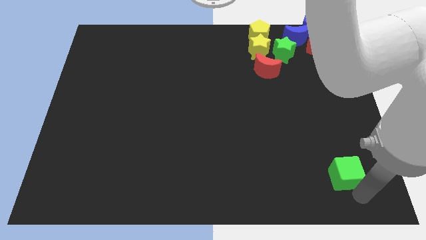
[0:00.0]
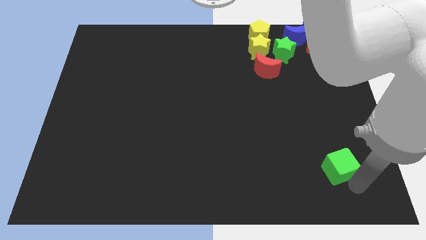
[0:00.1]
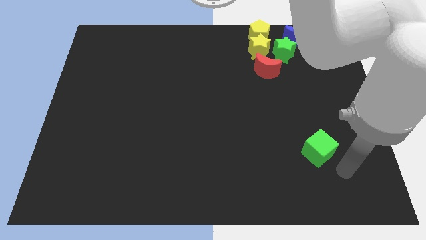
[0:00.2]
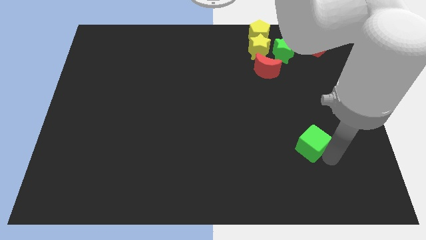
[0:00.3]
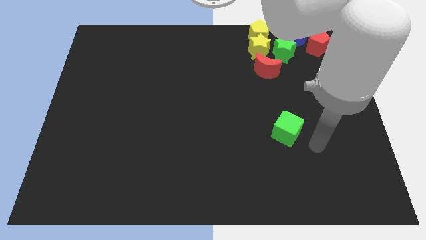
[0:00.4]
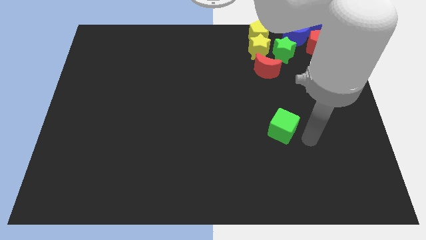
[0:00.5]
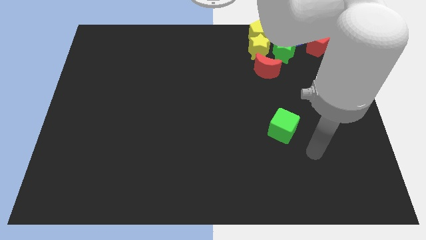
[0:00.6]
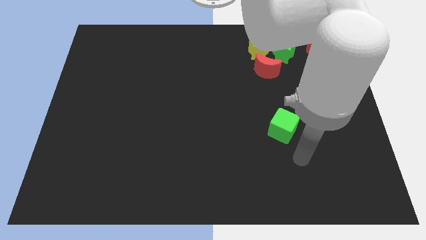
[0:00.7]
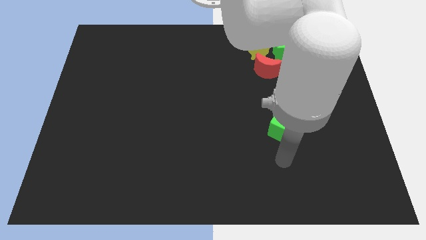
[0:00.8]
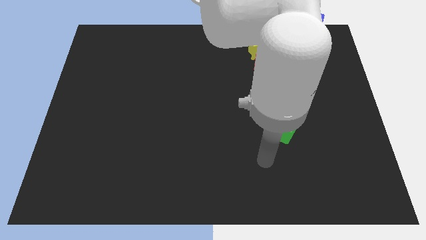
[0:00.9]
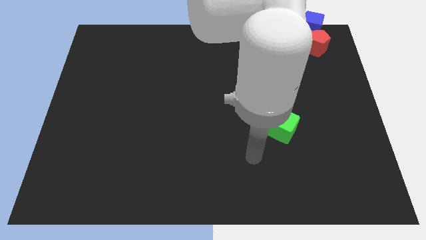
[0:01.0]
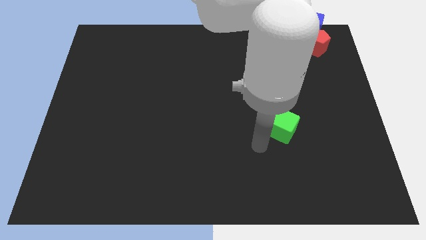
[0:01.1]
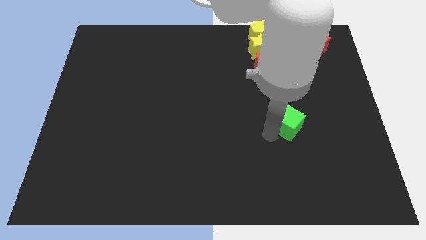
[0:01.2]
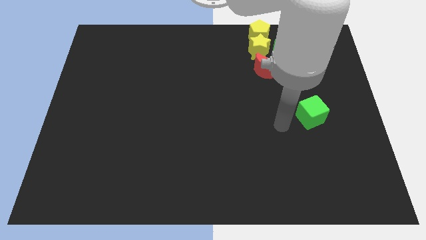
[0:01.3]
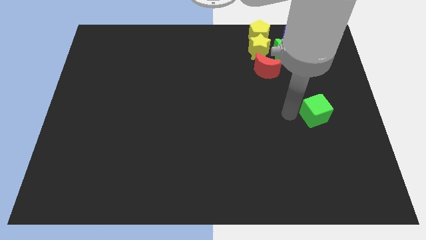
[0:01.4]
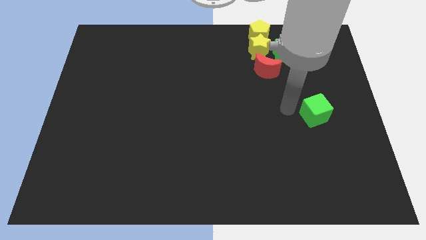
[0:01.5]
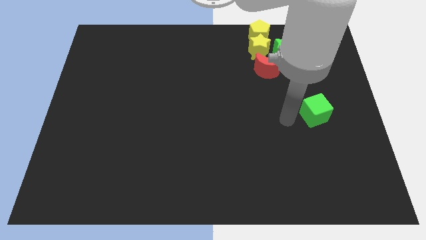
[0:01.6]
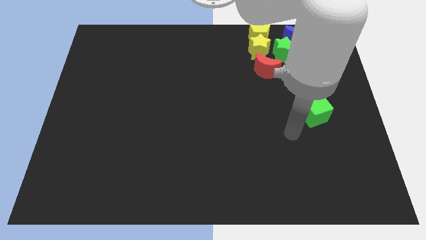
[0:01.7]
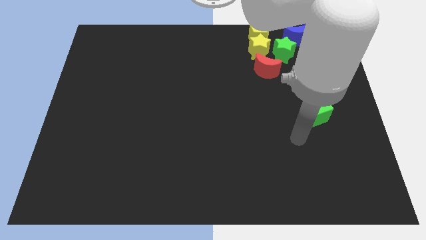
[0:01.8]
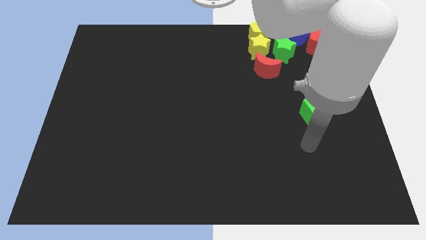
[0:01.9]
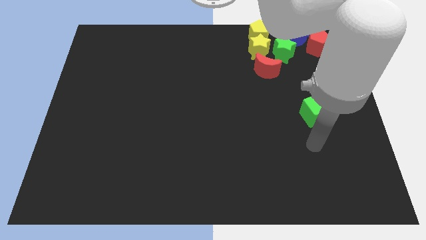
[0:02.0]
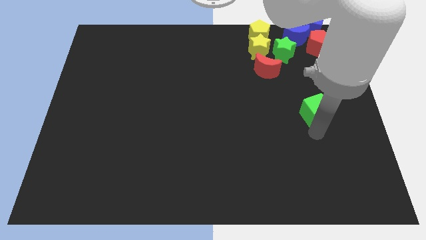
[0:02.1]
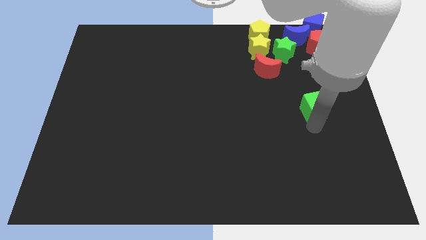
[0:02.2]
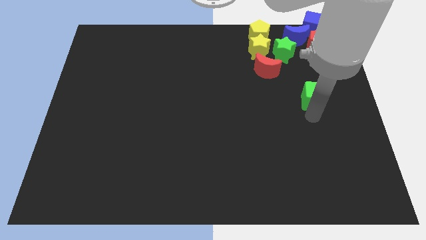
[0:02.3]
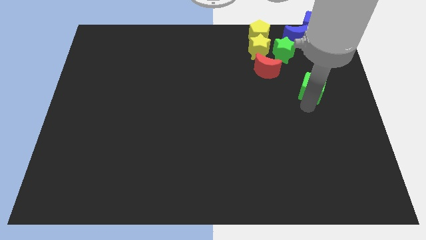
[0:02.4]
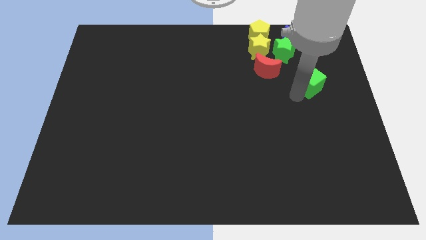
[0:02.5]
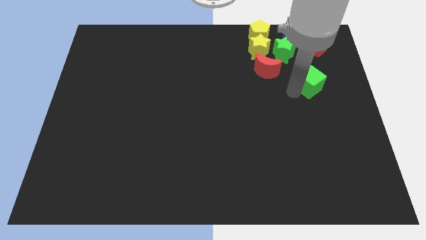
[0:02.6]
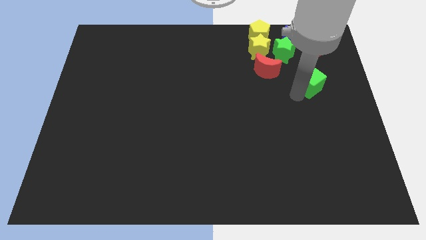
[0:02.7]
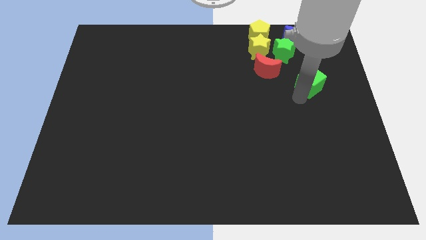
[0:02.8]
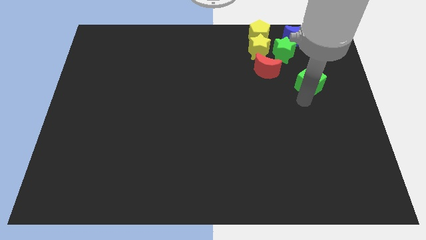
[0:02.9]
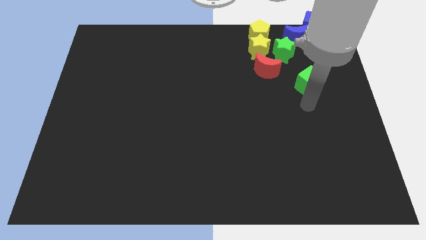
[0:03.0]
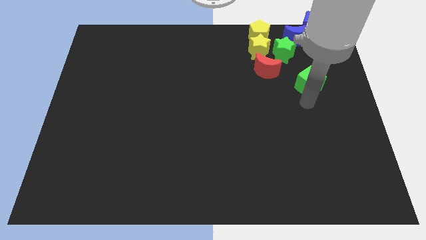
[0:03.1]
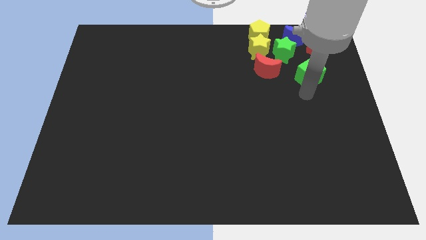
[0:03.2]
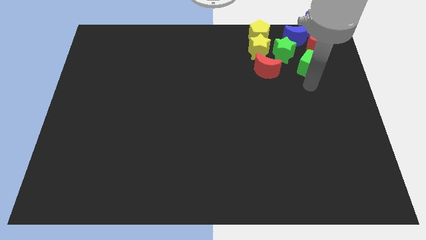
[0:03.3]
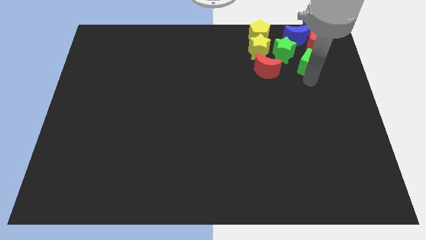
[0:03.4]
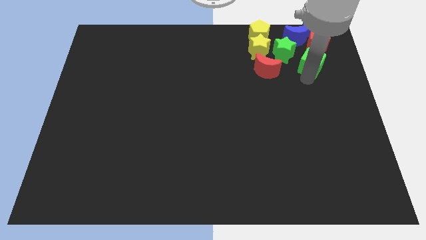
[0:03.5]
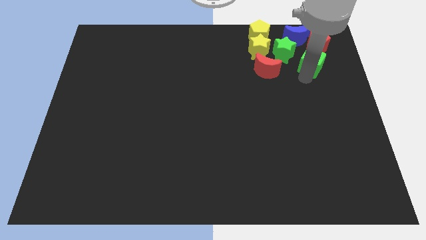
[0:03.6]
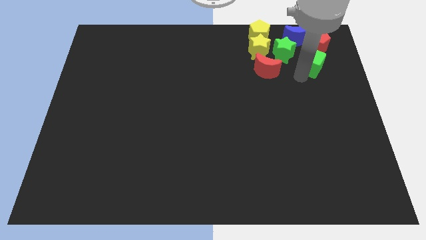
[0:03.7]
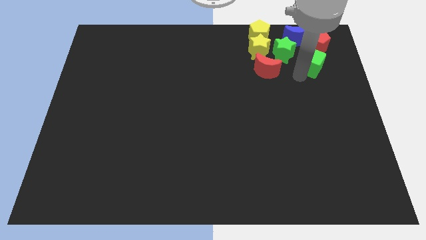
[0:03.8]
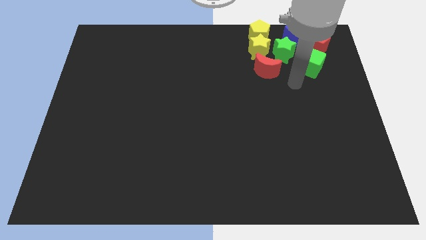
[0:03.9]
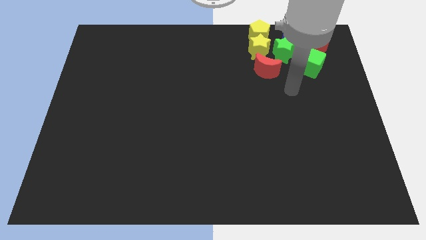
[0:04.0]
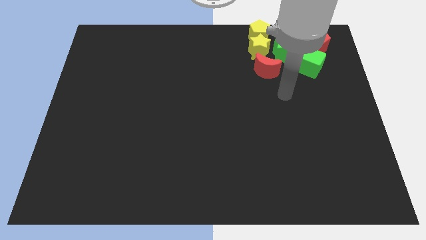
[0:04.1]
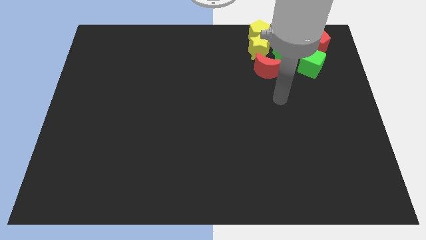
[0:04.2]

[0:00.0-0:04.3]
drag green cube near red pentagon

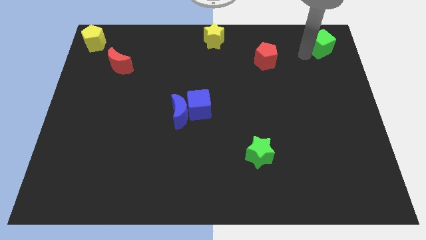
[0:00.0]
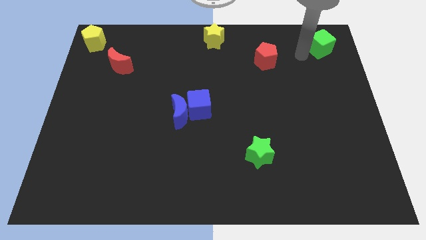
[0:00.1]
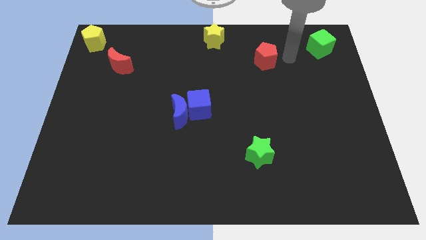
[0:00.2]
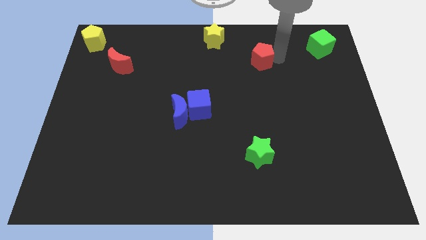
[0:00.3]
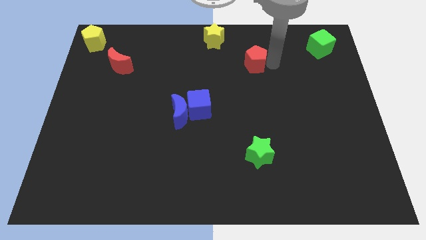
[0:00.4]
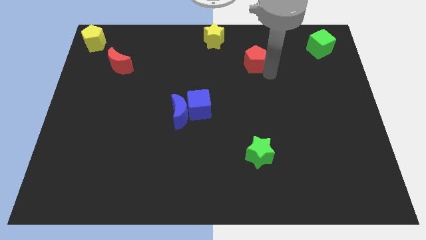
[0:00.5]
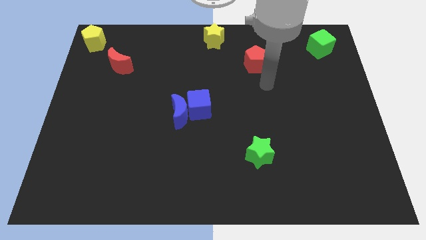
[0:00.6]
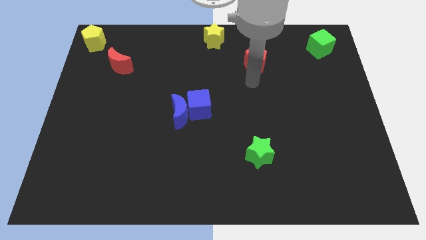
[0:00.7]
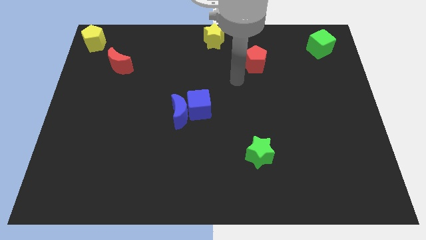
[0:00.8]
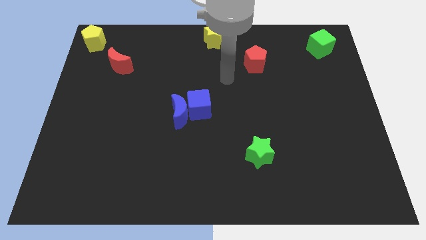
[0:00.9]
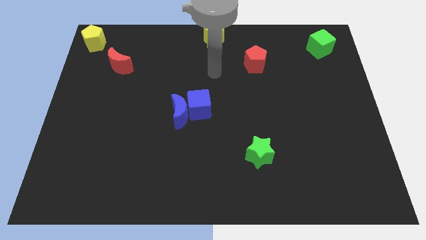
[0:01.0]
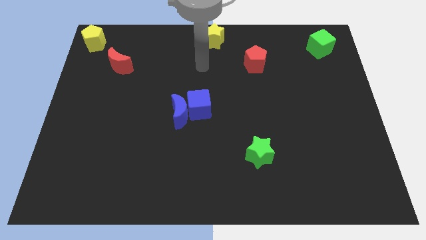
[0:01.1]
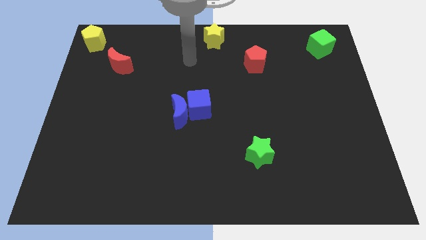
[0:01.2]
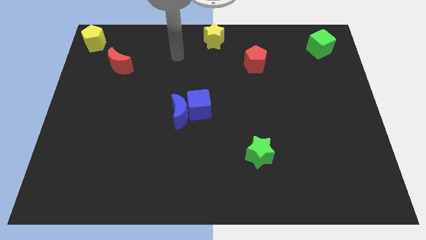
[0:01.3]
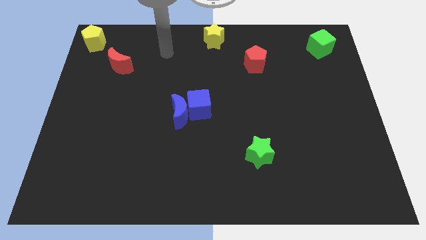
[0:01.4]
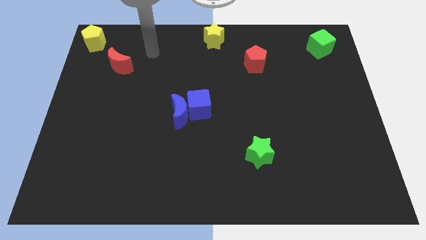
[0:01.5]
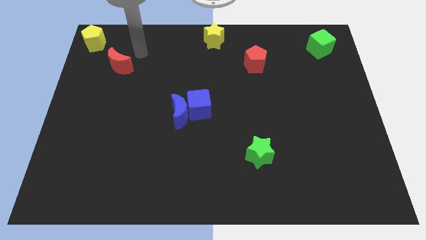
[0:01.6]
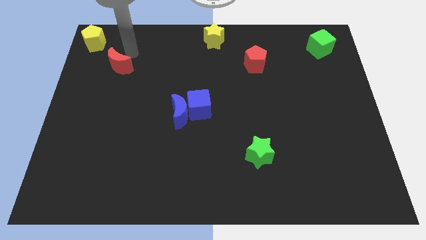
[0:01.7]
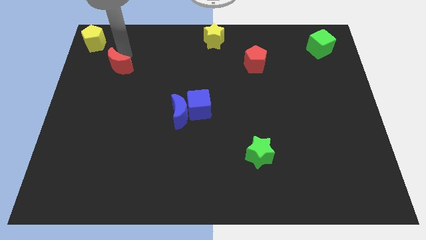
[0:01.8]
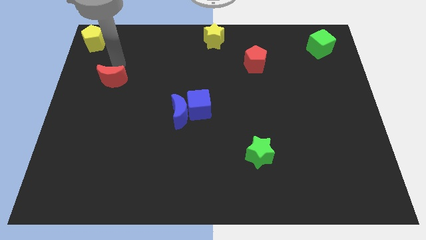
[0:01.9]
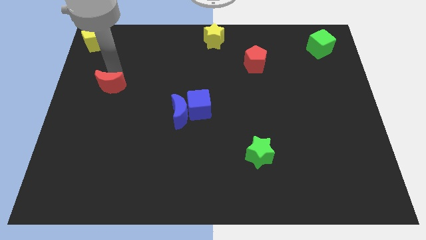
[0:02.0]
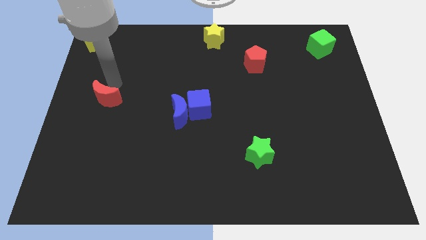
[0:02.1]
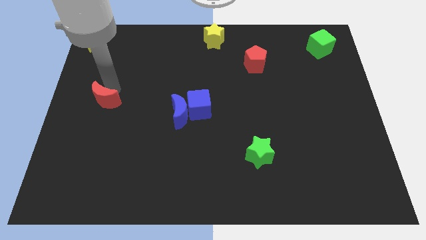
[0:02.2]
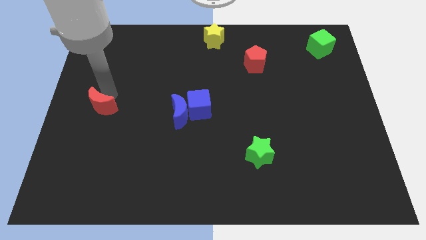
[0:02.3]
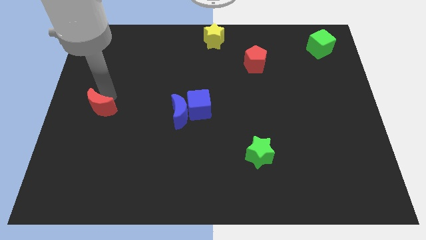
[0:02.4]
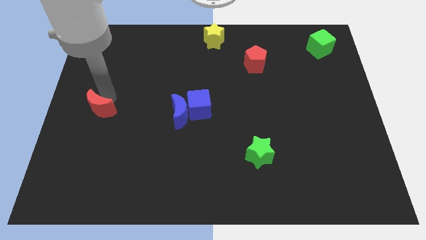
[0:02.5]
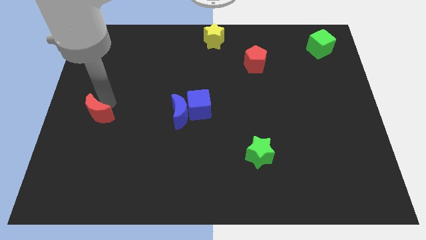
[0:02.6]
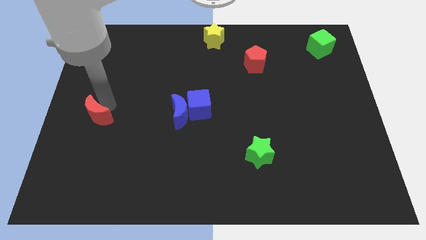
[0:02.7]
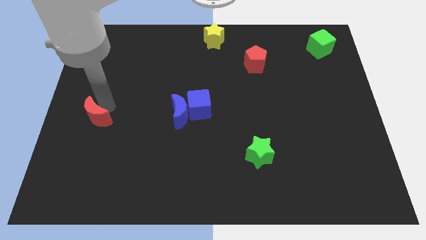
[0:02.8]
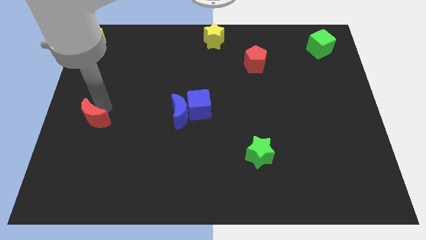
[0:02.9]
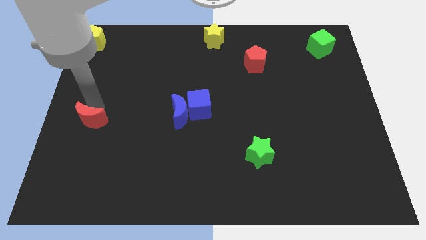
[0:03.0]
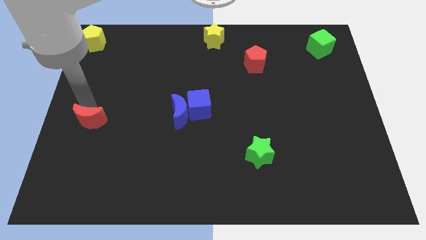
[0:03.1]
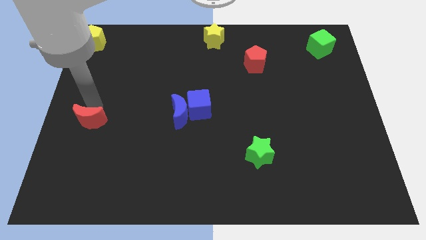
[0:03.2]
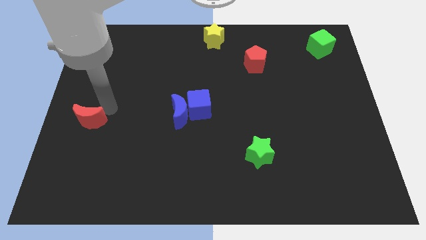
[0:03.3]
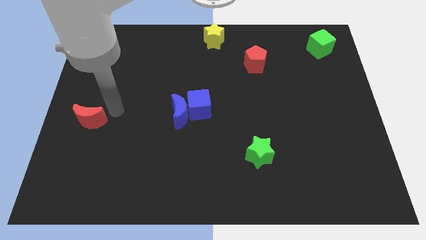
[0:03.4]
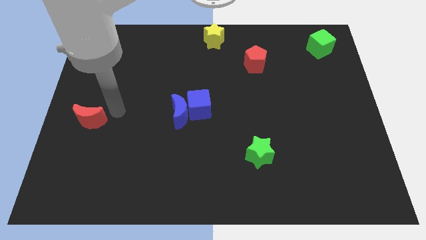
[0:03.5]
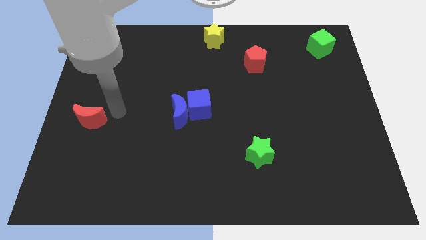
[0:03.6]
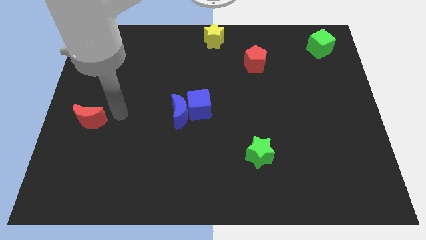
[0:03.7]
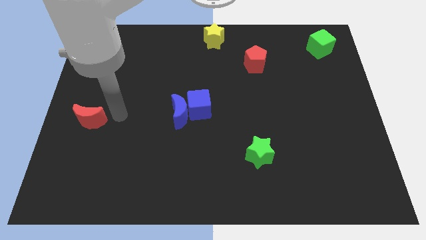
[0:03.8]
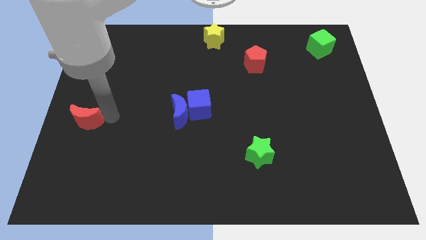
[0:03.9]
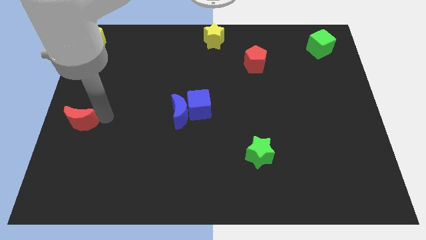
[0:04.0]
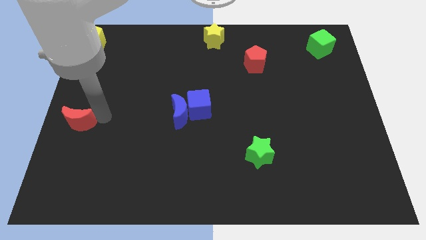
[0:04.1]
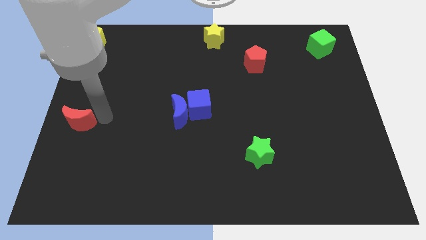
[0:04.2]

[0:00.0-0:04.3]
drag the red crescent to the center left of the board

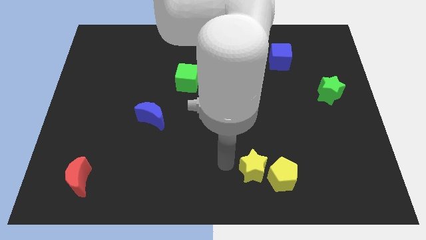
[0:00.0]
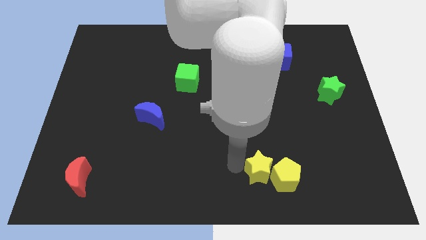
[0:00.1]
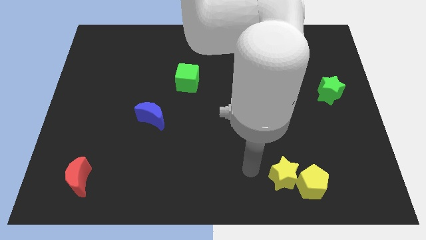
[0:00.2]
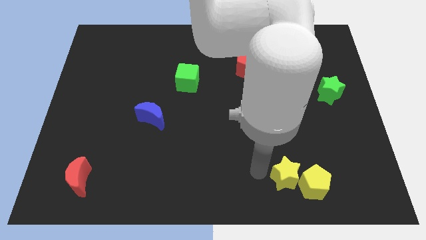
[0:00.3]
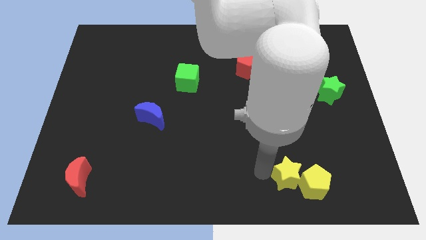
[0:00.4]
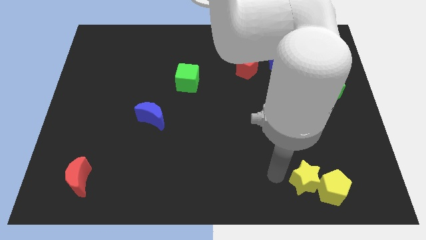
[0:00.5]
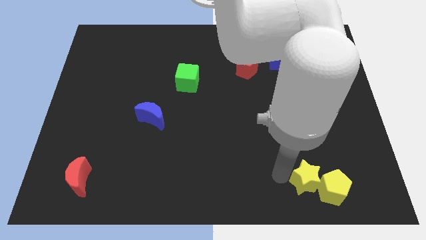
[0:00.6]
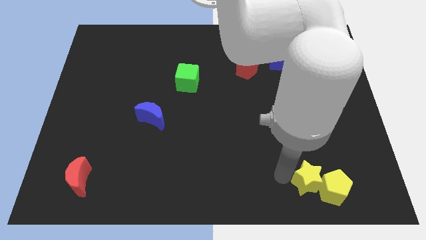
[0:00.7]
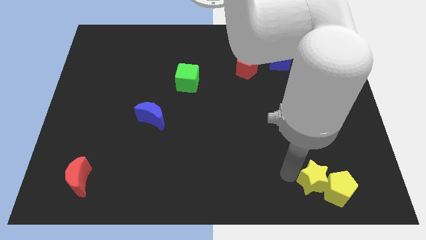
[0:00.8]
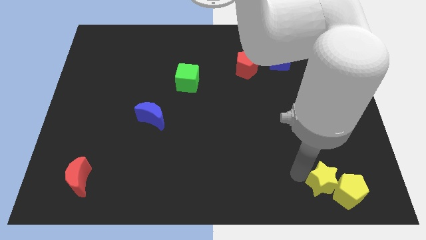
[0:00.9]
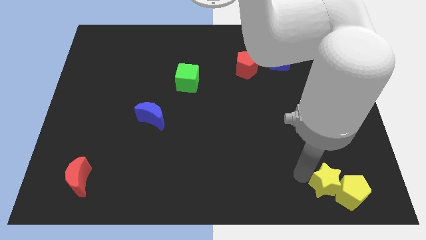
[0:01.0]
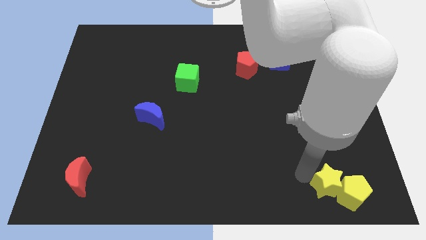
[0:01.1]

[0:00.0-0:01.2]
push the yellow star and yellow pentagon to the bottom right side of the board
